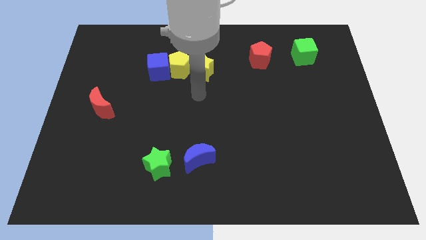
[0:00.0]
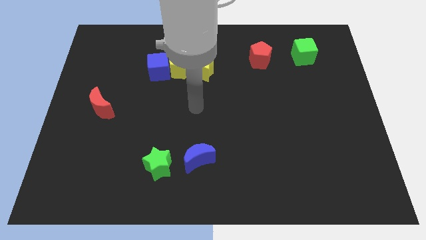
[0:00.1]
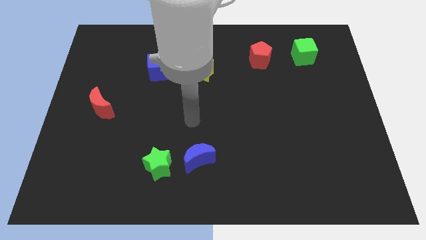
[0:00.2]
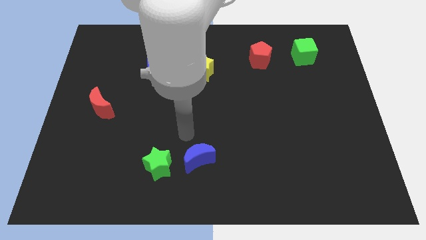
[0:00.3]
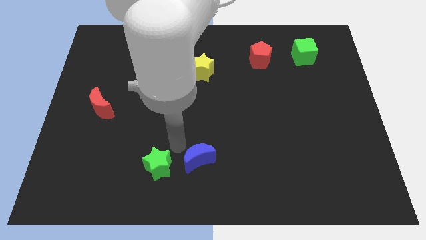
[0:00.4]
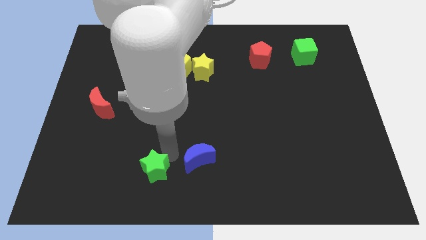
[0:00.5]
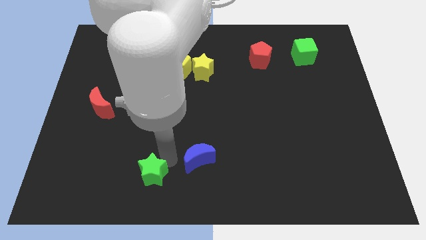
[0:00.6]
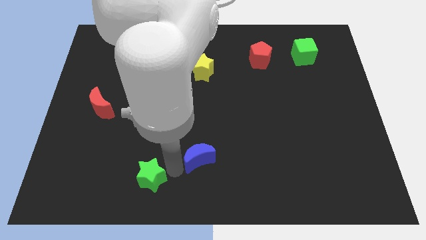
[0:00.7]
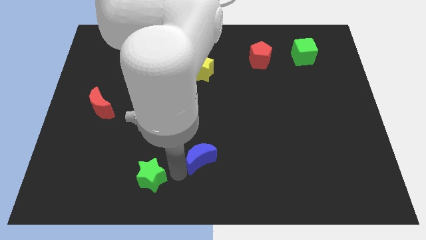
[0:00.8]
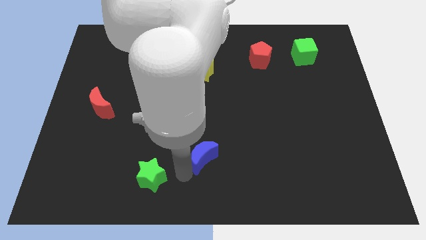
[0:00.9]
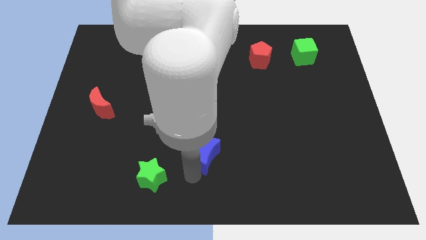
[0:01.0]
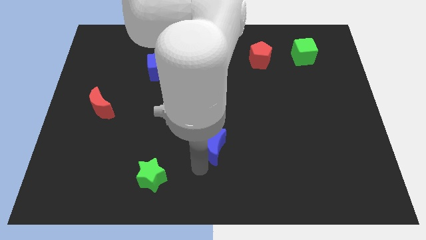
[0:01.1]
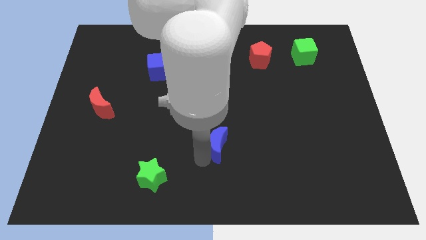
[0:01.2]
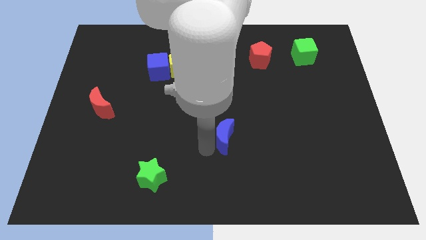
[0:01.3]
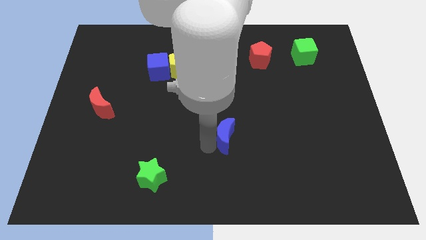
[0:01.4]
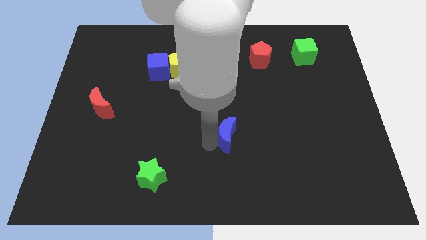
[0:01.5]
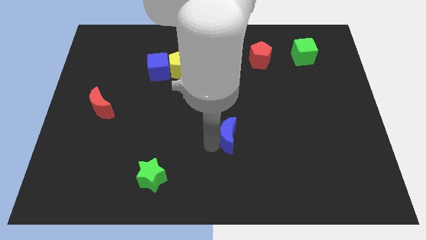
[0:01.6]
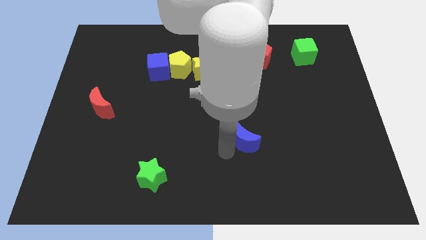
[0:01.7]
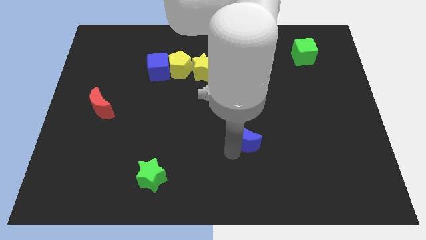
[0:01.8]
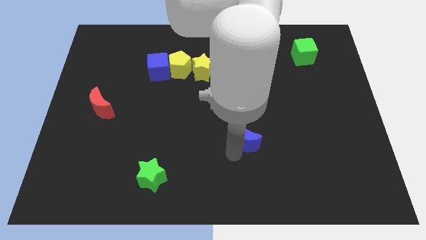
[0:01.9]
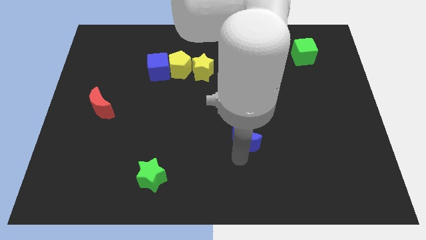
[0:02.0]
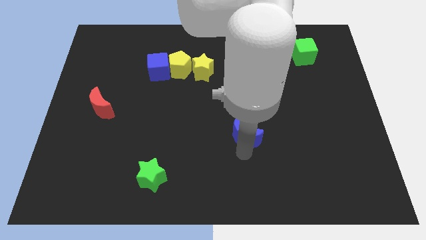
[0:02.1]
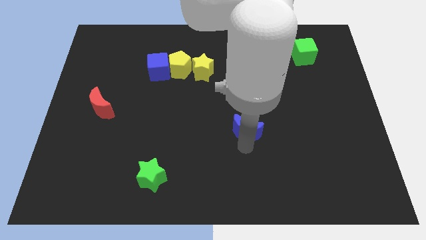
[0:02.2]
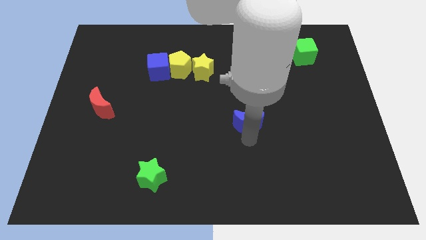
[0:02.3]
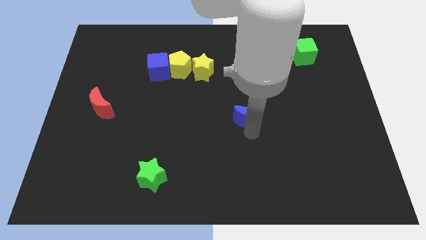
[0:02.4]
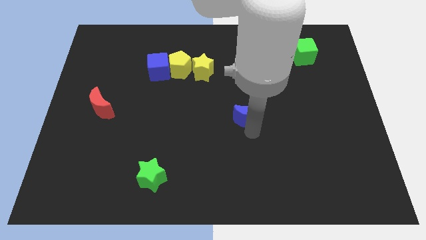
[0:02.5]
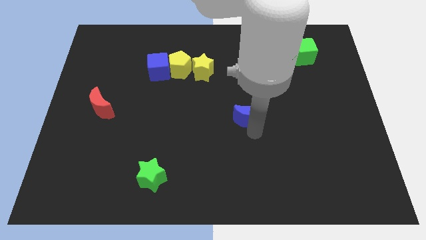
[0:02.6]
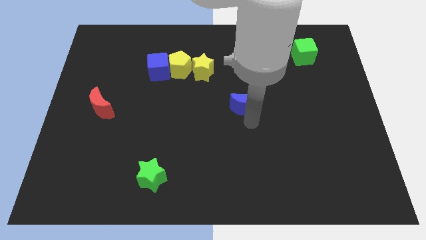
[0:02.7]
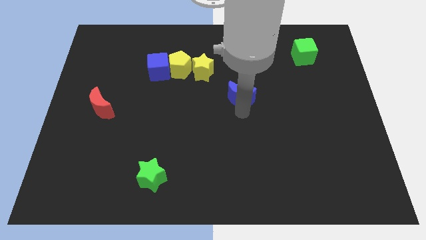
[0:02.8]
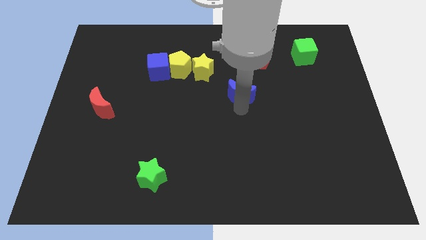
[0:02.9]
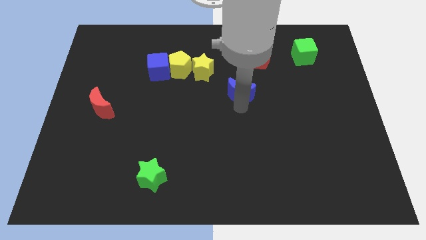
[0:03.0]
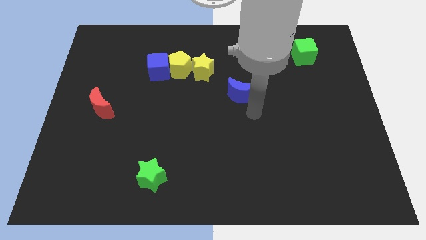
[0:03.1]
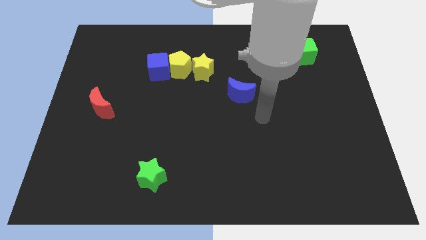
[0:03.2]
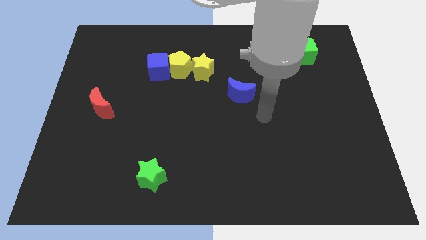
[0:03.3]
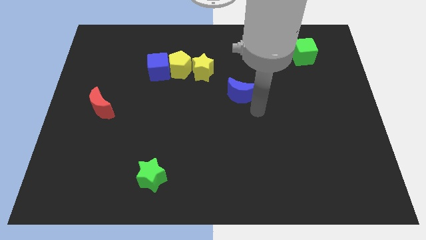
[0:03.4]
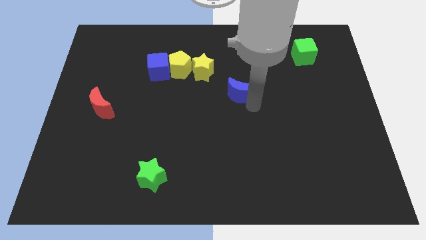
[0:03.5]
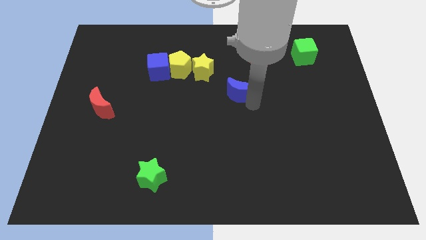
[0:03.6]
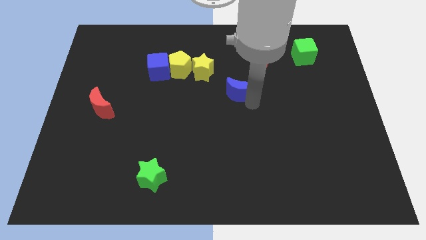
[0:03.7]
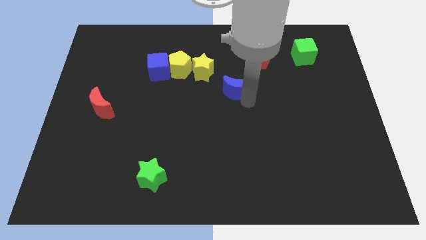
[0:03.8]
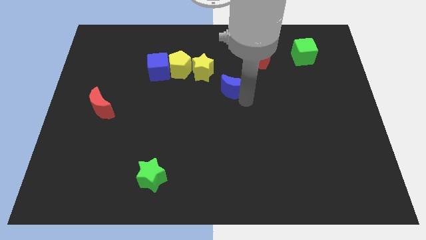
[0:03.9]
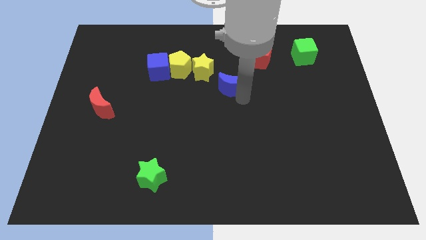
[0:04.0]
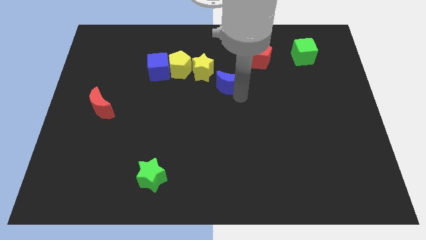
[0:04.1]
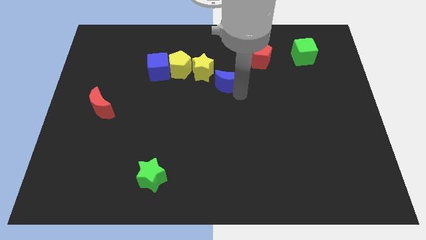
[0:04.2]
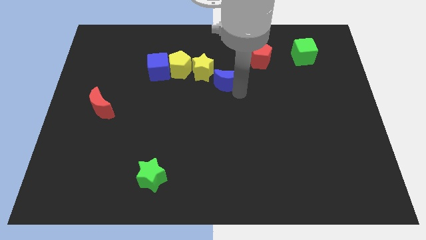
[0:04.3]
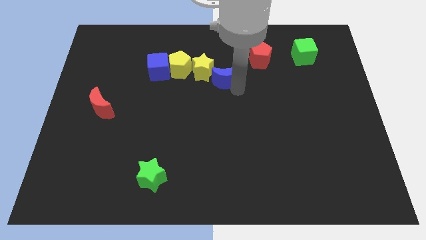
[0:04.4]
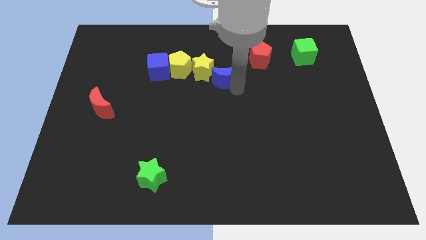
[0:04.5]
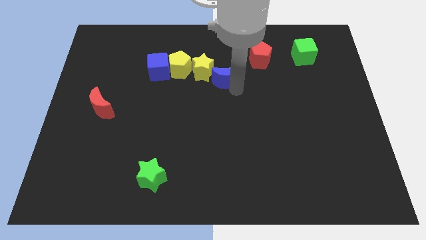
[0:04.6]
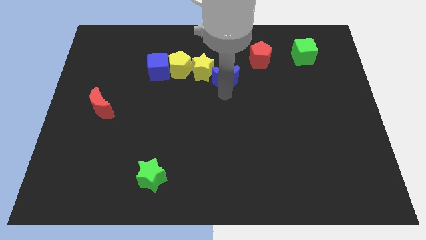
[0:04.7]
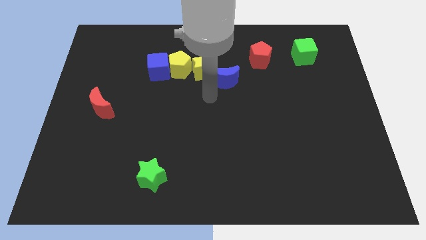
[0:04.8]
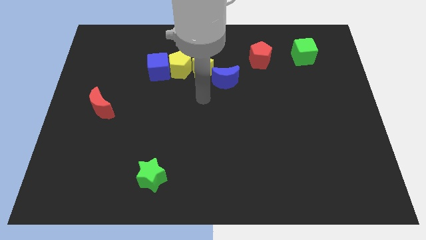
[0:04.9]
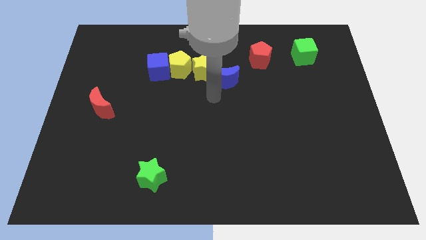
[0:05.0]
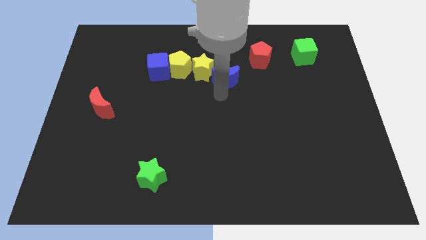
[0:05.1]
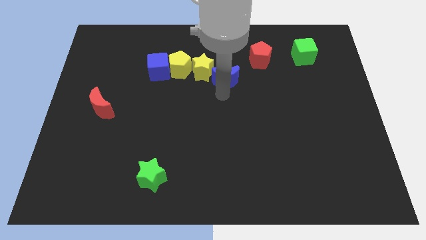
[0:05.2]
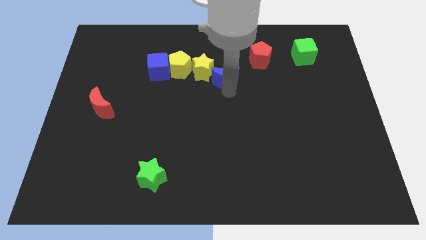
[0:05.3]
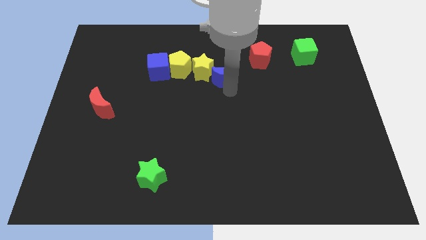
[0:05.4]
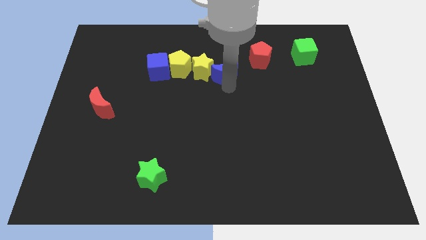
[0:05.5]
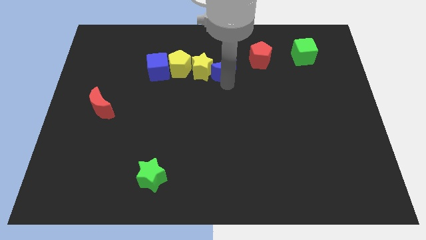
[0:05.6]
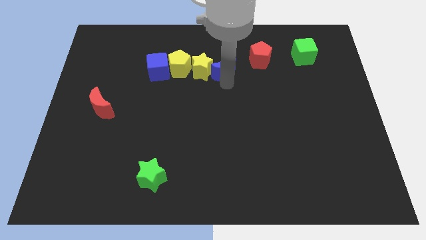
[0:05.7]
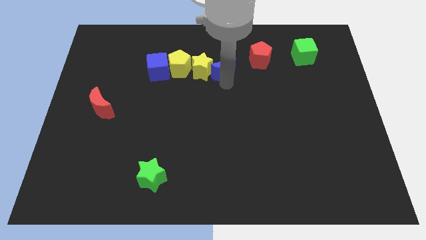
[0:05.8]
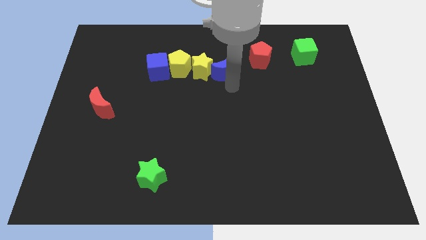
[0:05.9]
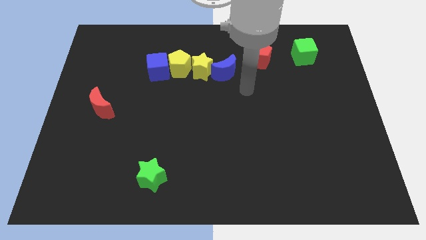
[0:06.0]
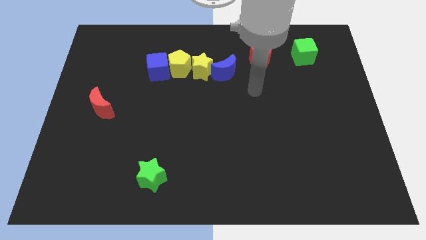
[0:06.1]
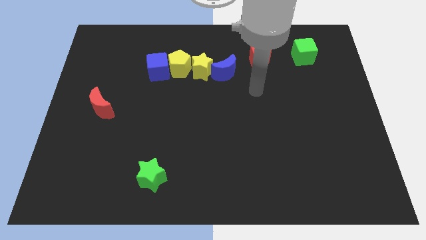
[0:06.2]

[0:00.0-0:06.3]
move the blue crescent to the right side of the yellow star

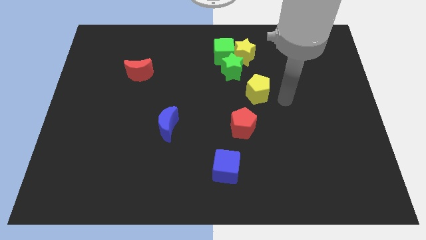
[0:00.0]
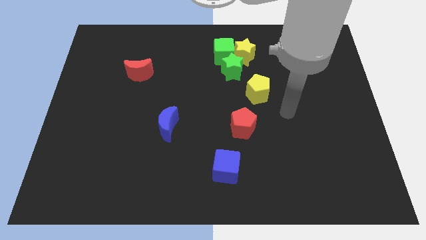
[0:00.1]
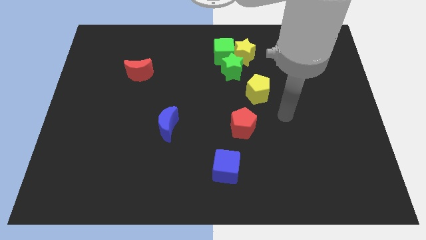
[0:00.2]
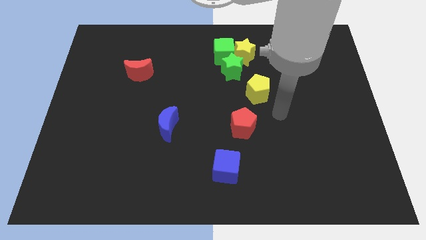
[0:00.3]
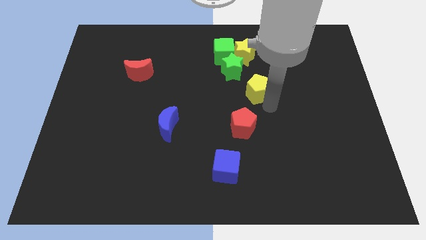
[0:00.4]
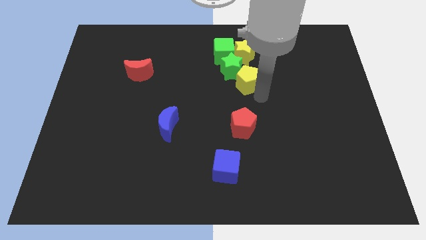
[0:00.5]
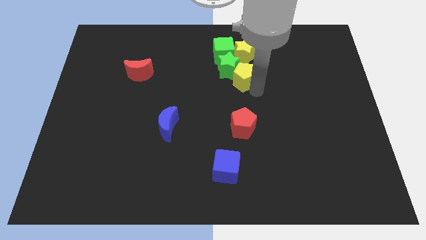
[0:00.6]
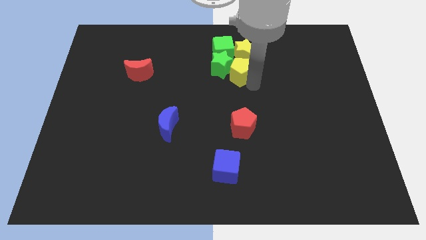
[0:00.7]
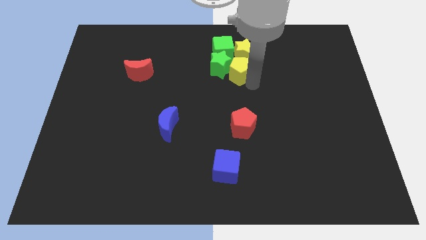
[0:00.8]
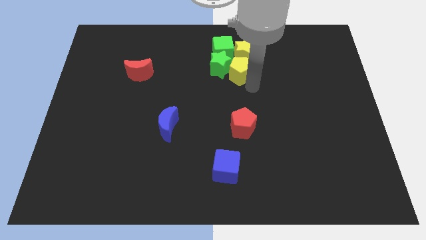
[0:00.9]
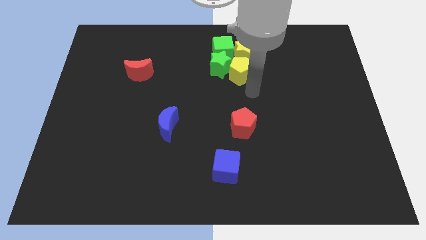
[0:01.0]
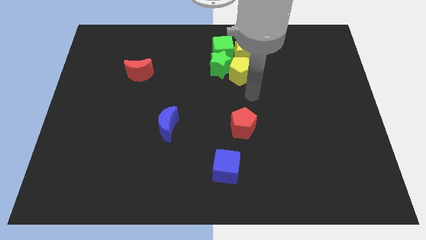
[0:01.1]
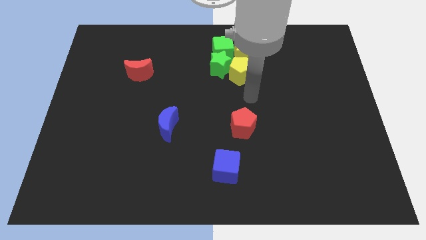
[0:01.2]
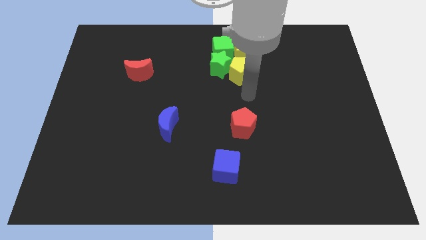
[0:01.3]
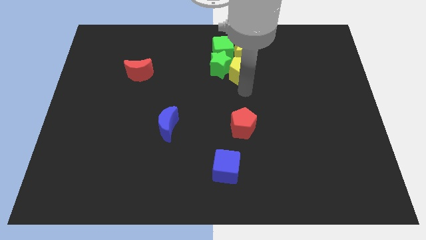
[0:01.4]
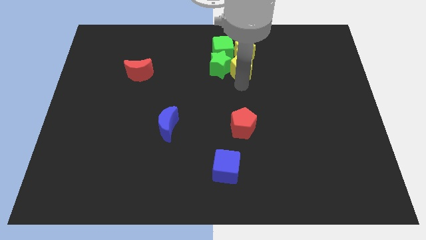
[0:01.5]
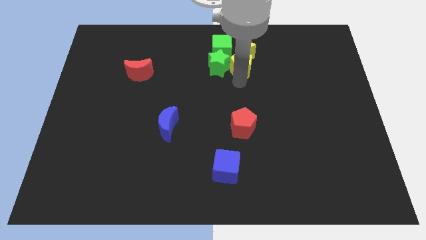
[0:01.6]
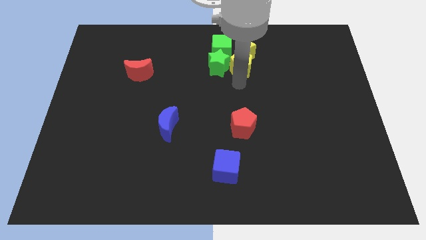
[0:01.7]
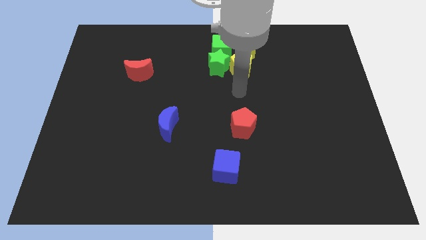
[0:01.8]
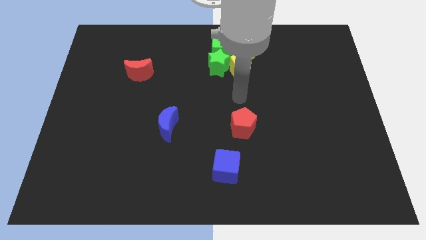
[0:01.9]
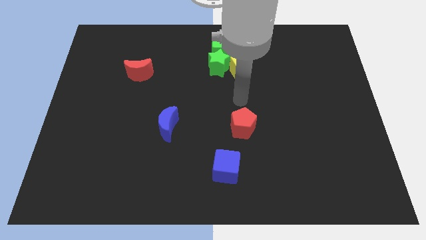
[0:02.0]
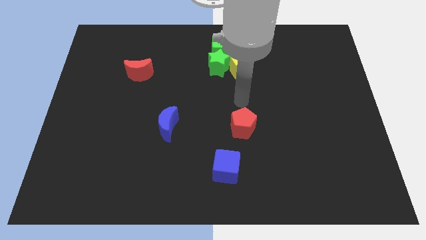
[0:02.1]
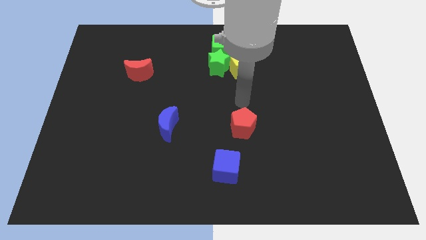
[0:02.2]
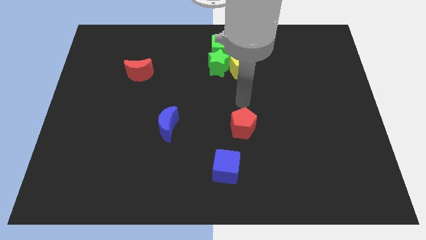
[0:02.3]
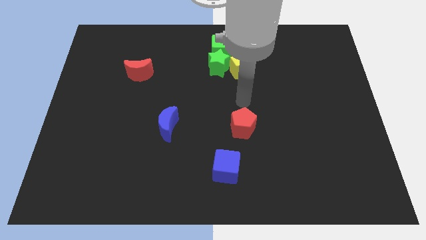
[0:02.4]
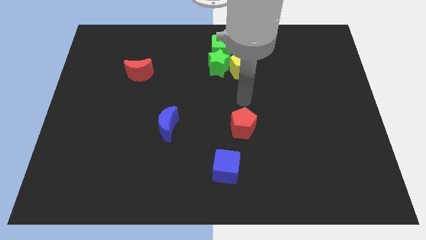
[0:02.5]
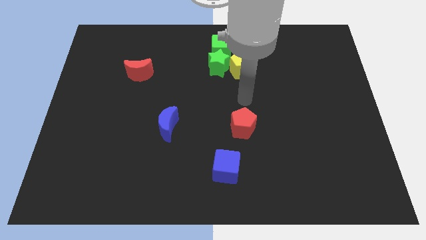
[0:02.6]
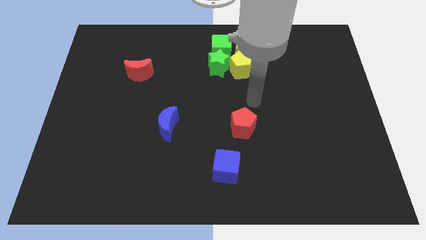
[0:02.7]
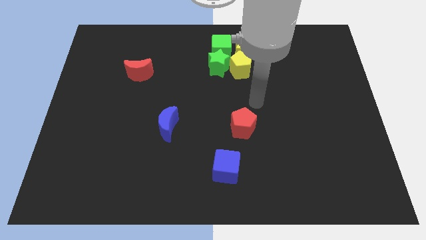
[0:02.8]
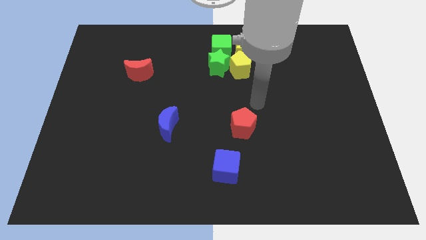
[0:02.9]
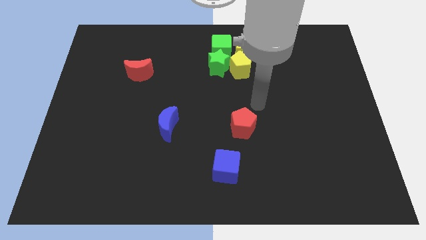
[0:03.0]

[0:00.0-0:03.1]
push the yellow pentagon right to the green star
